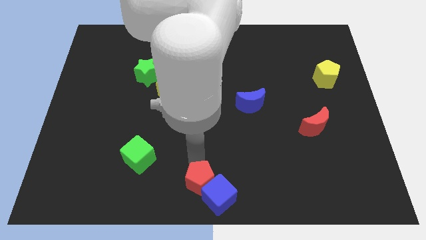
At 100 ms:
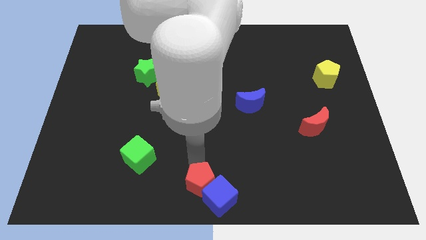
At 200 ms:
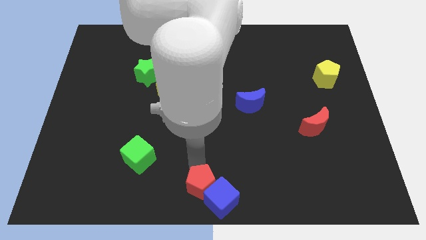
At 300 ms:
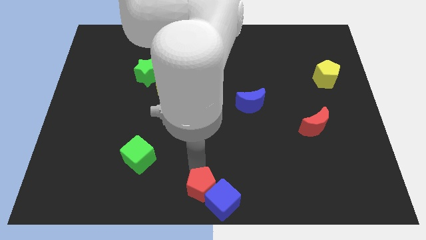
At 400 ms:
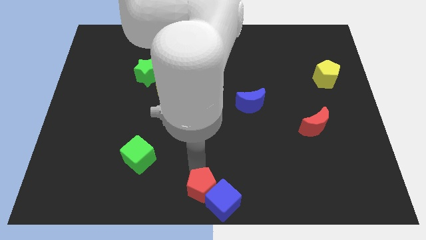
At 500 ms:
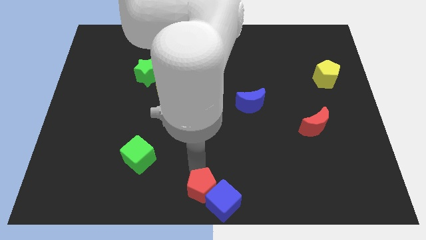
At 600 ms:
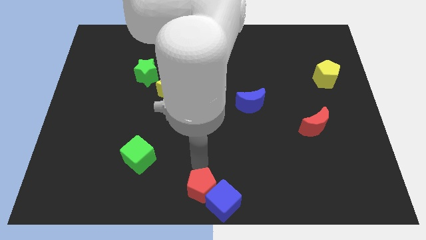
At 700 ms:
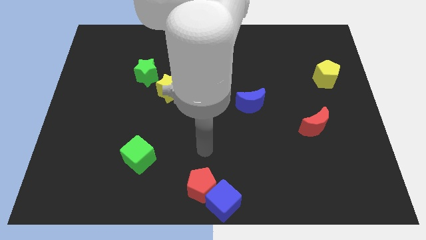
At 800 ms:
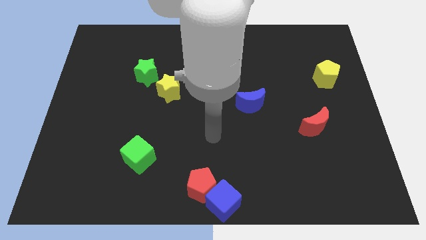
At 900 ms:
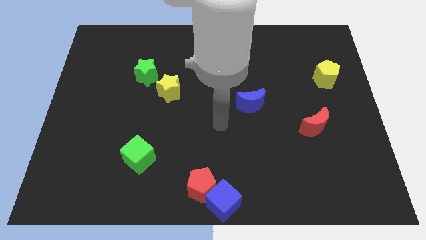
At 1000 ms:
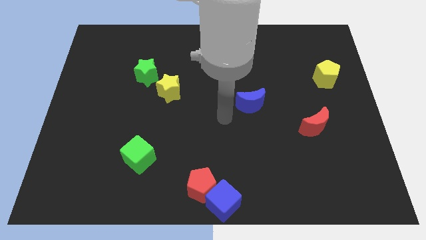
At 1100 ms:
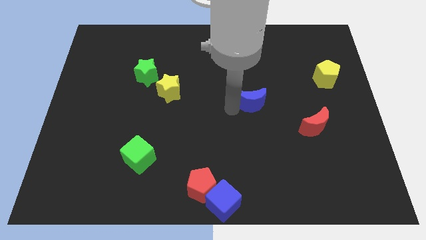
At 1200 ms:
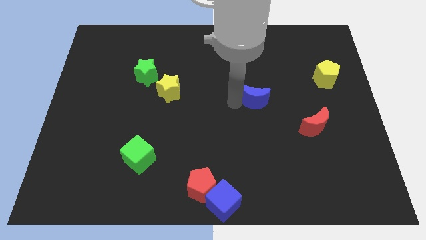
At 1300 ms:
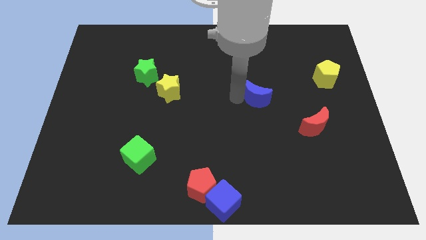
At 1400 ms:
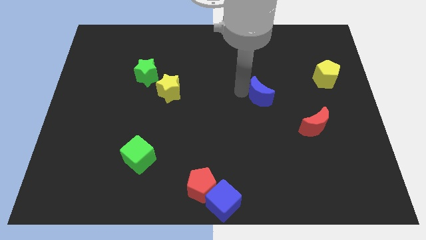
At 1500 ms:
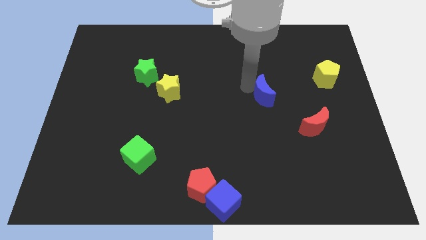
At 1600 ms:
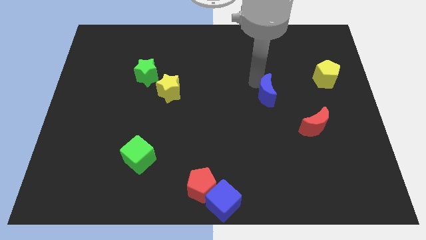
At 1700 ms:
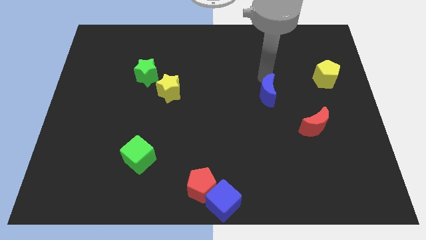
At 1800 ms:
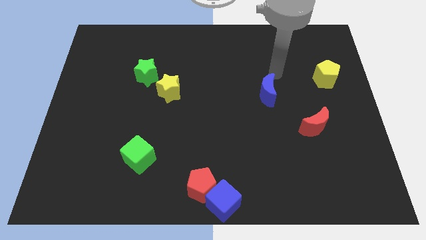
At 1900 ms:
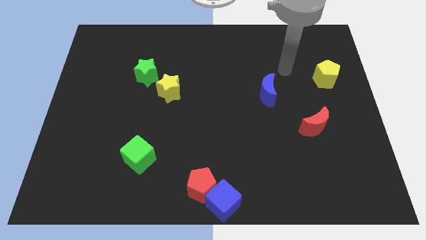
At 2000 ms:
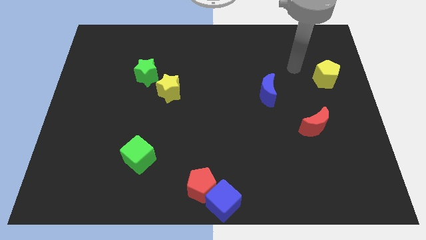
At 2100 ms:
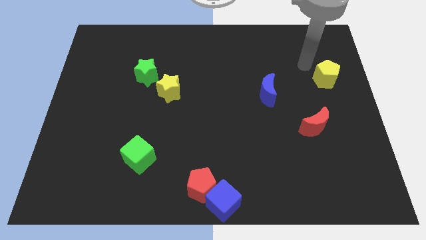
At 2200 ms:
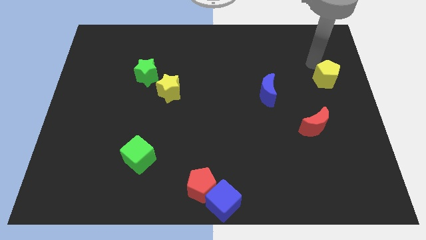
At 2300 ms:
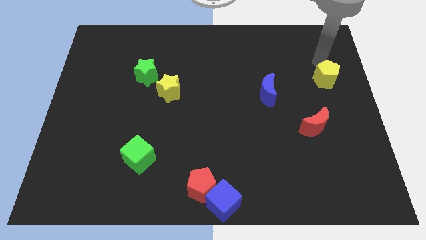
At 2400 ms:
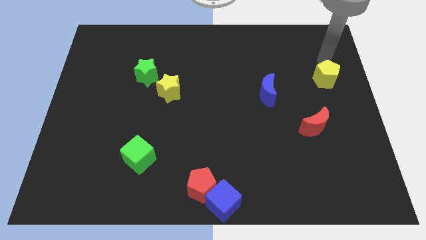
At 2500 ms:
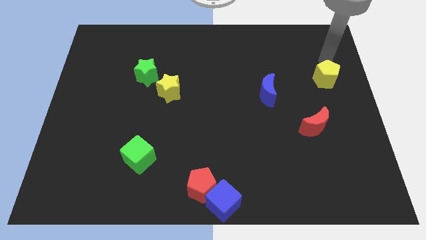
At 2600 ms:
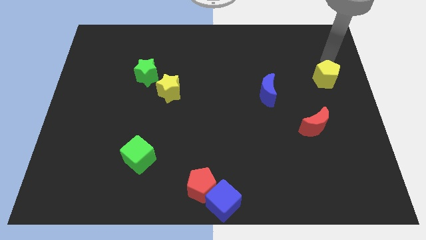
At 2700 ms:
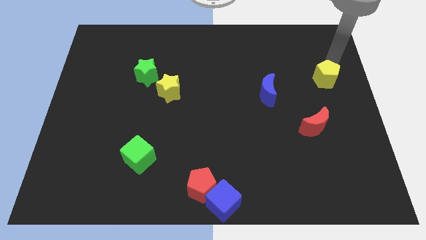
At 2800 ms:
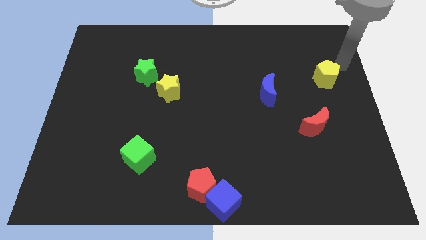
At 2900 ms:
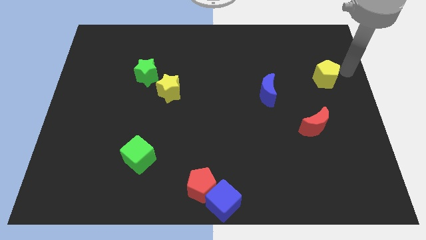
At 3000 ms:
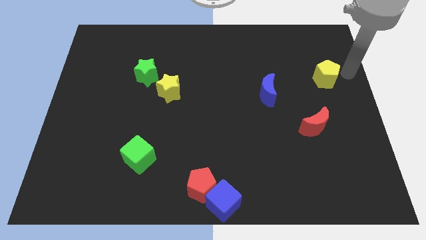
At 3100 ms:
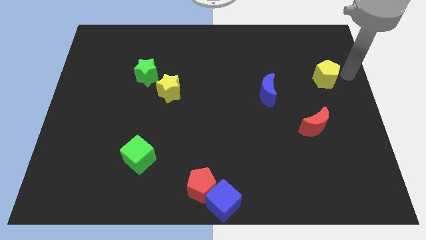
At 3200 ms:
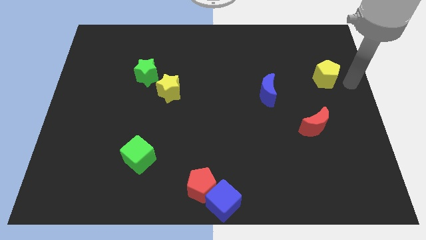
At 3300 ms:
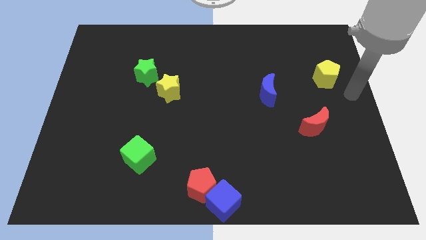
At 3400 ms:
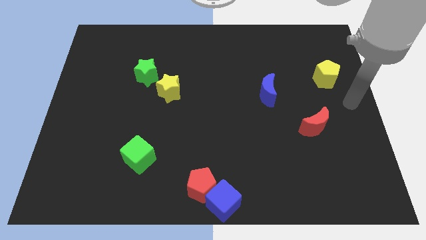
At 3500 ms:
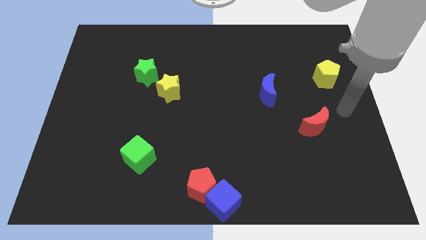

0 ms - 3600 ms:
move the arm towards the right centre of the board

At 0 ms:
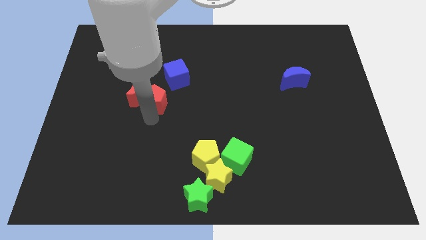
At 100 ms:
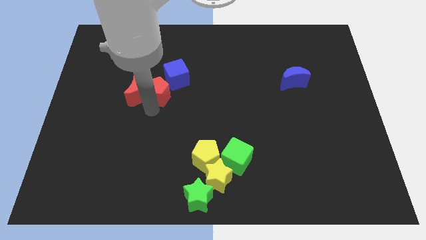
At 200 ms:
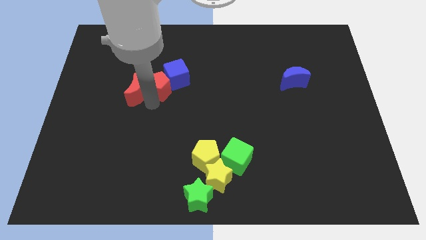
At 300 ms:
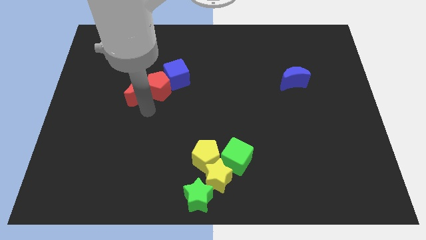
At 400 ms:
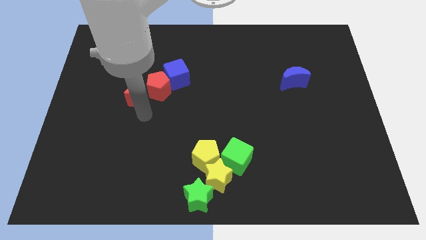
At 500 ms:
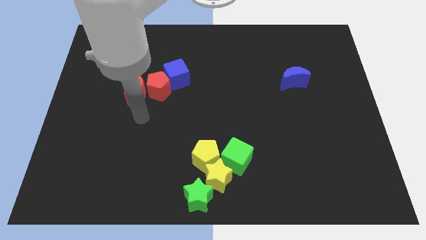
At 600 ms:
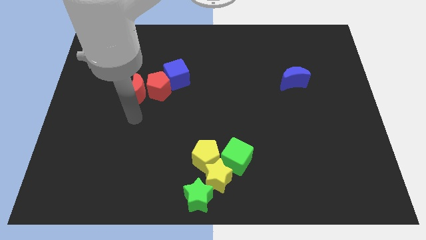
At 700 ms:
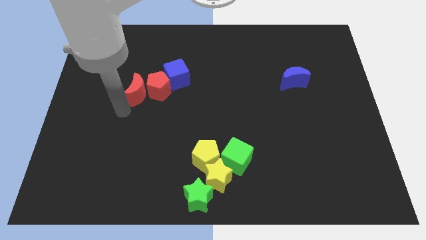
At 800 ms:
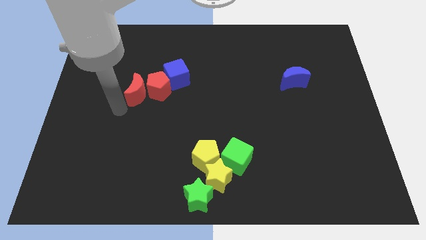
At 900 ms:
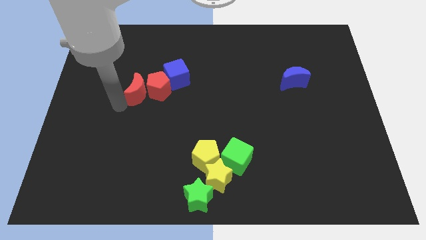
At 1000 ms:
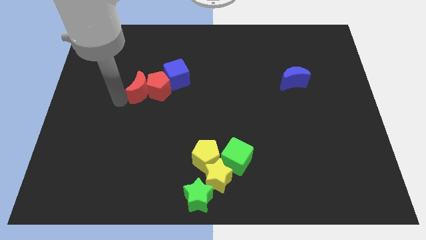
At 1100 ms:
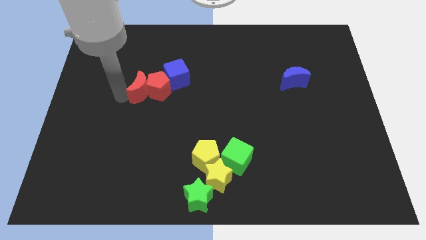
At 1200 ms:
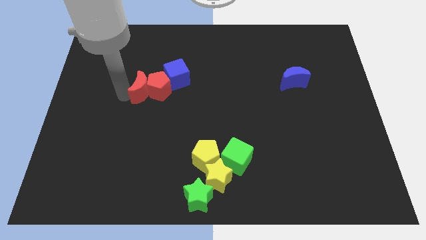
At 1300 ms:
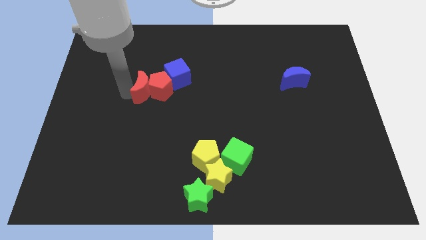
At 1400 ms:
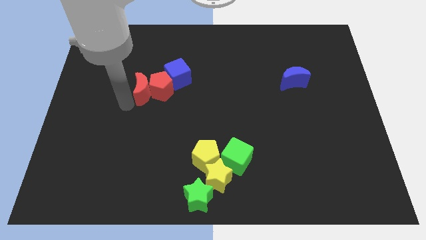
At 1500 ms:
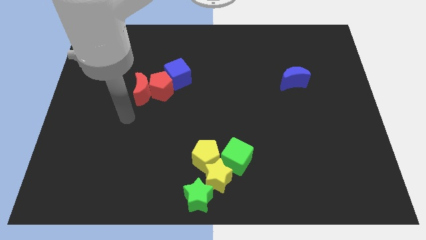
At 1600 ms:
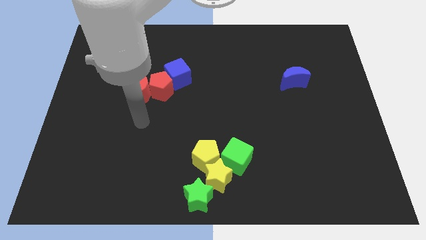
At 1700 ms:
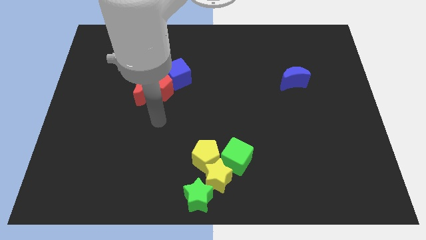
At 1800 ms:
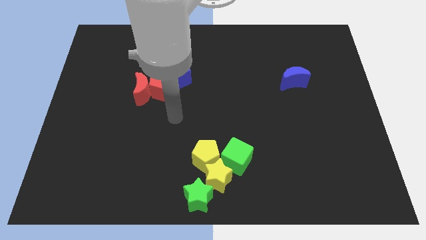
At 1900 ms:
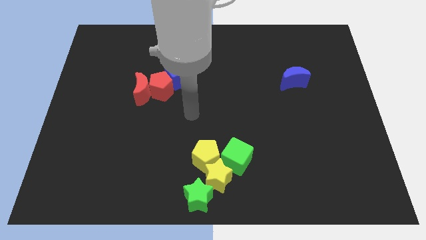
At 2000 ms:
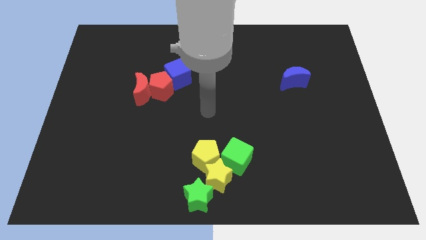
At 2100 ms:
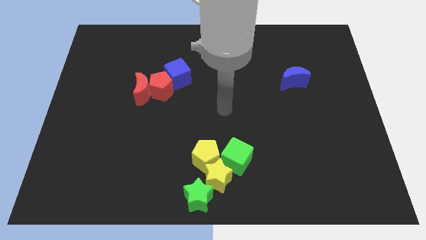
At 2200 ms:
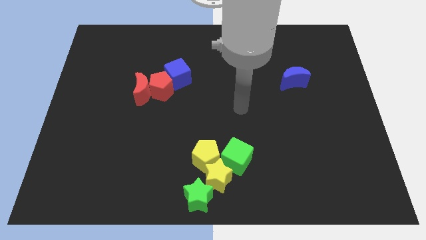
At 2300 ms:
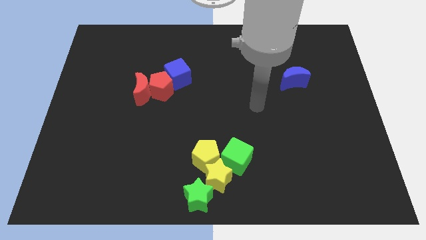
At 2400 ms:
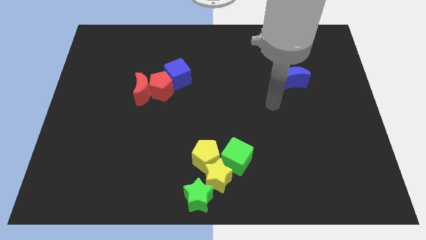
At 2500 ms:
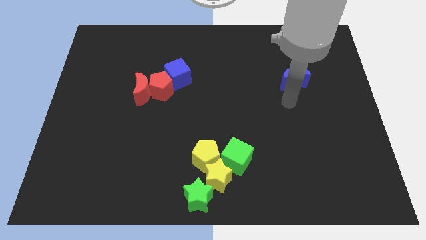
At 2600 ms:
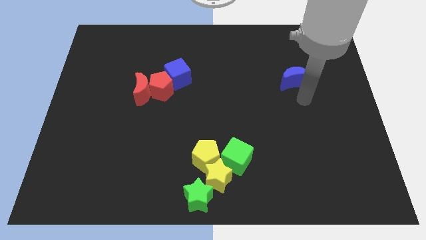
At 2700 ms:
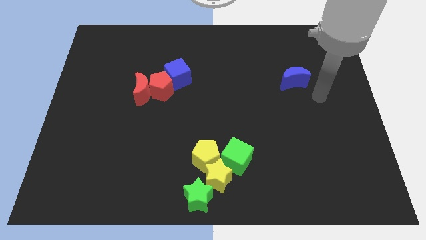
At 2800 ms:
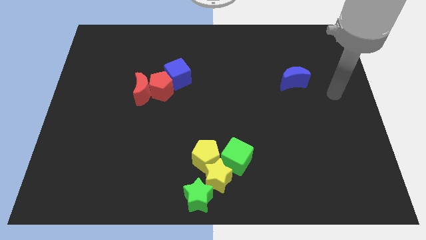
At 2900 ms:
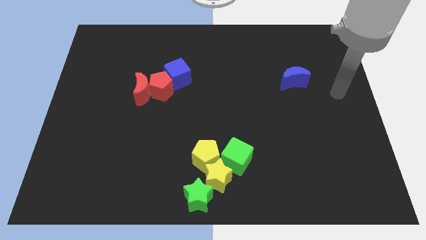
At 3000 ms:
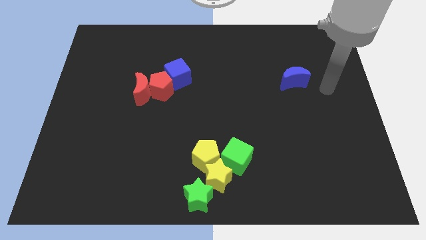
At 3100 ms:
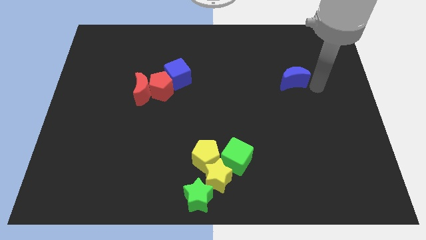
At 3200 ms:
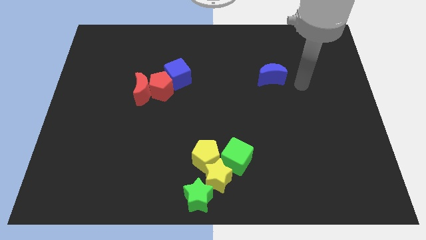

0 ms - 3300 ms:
move your arm right side to the blue crescent

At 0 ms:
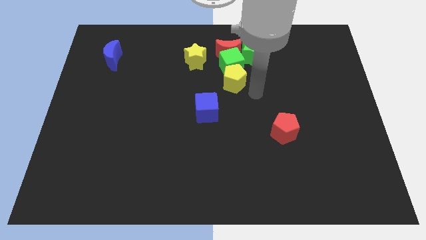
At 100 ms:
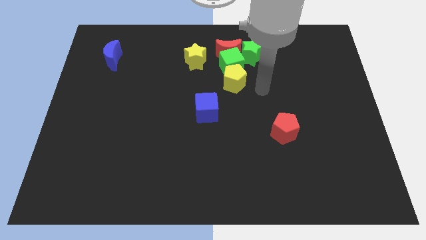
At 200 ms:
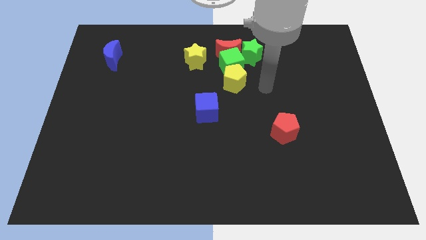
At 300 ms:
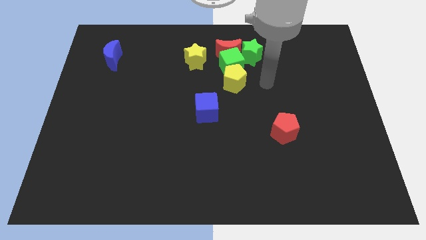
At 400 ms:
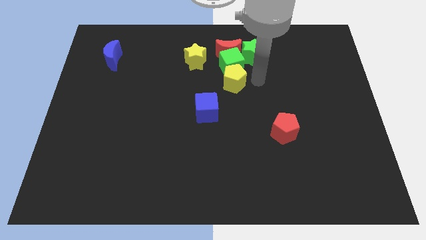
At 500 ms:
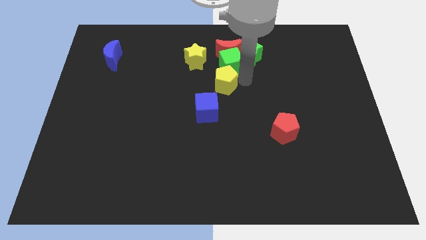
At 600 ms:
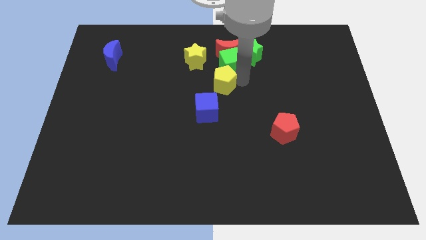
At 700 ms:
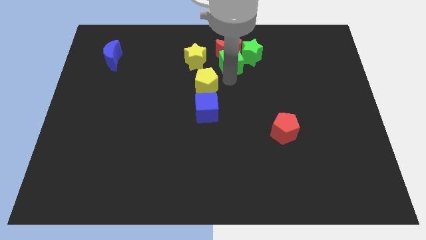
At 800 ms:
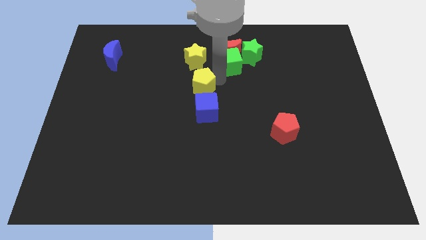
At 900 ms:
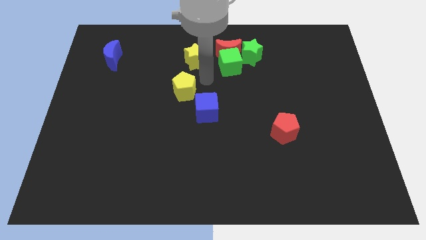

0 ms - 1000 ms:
place the yellow pentagon in between the yellow star and blue cube

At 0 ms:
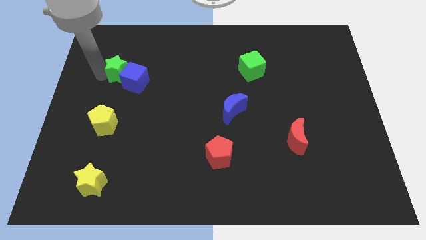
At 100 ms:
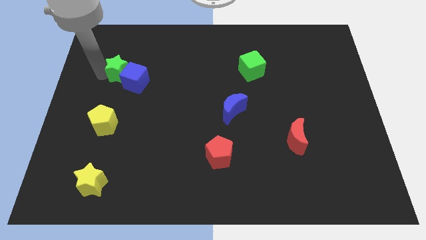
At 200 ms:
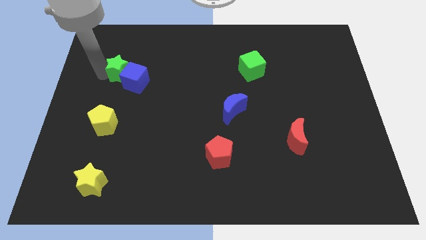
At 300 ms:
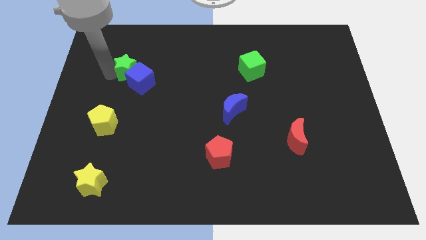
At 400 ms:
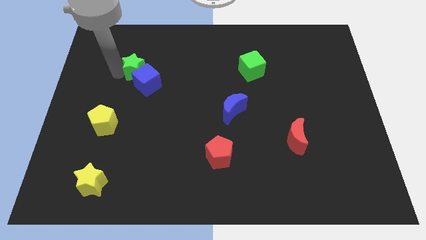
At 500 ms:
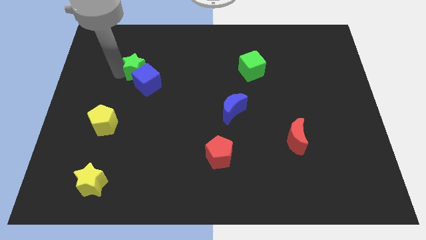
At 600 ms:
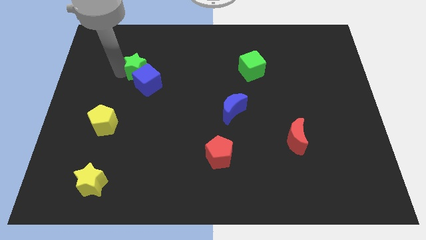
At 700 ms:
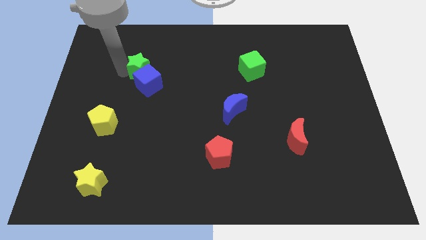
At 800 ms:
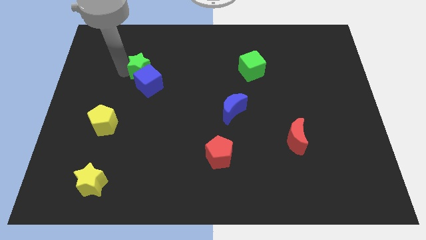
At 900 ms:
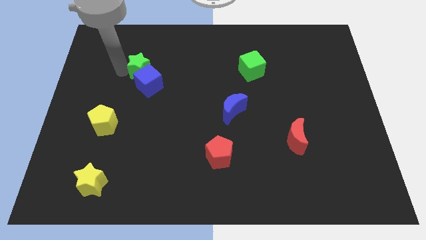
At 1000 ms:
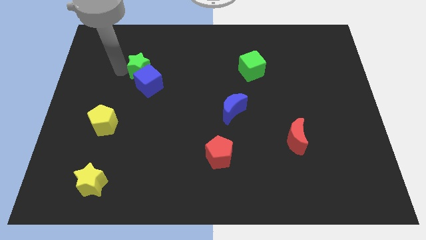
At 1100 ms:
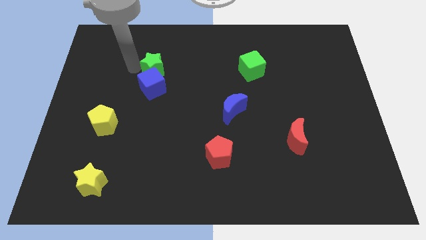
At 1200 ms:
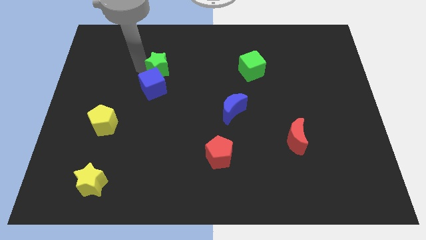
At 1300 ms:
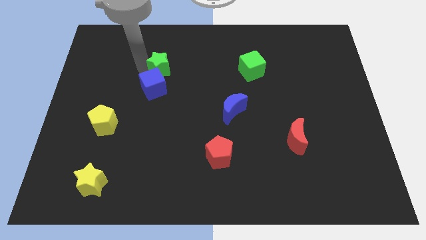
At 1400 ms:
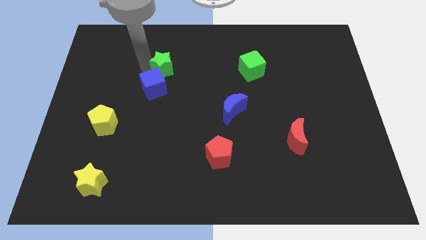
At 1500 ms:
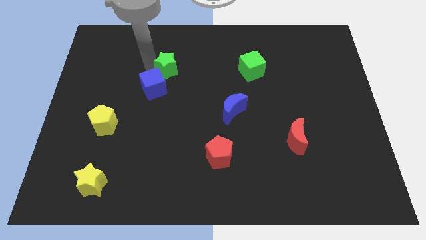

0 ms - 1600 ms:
push the blue cube with the green star towards the center of the board
